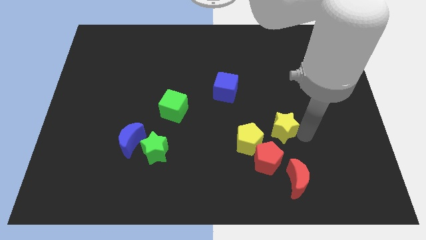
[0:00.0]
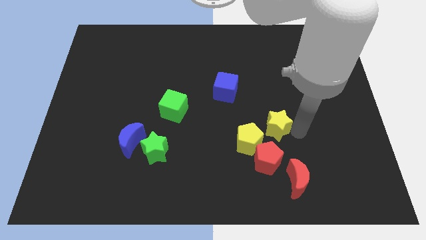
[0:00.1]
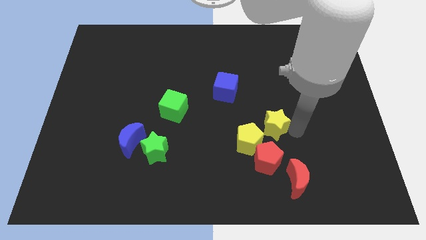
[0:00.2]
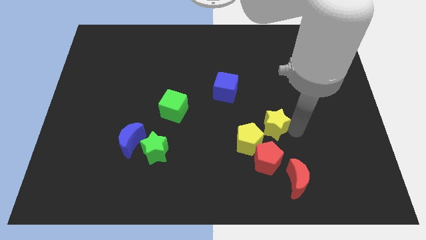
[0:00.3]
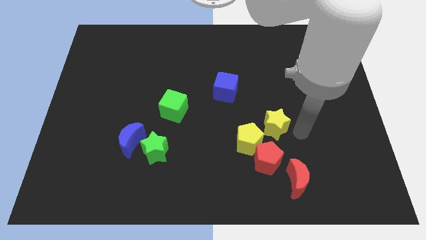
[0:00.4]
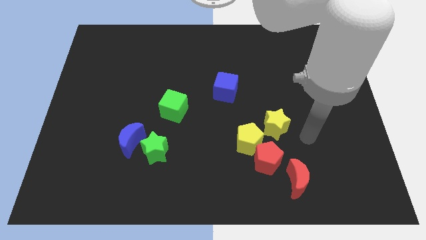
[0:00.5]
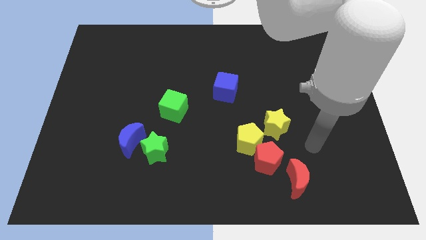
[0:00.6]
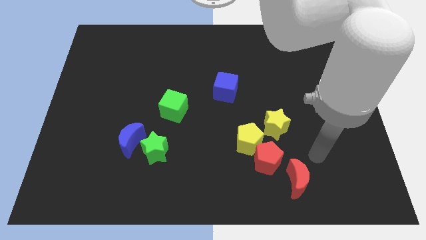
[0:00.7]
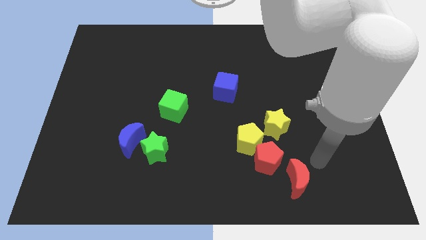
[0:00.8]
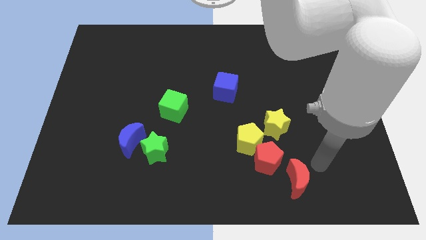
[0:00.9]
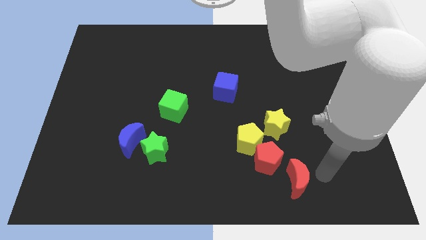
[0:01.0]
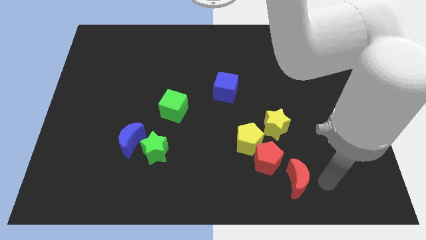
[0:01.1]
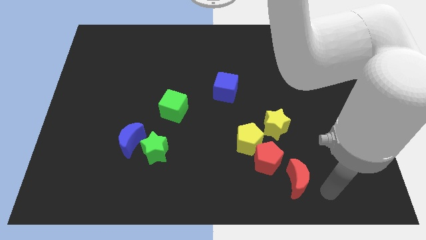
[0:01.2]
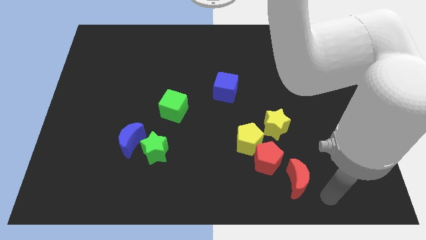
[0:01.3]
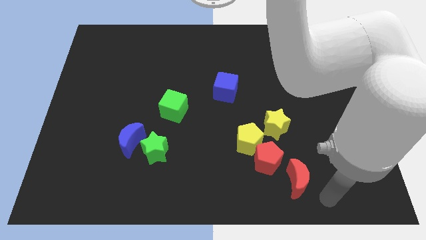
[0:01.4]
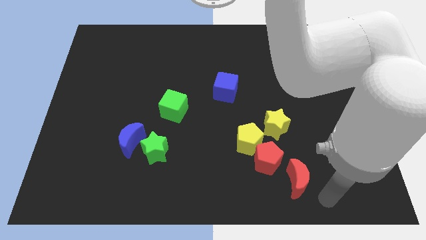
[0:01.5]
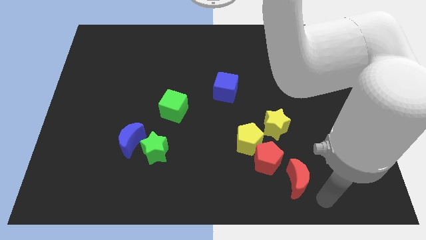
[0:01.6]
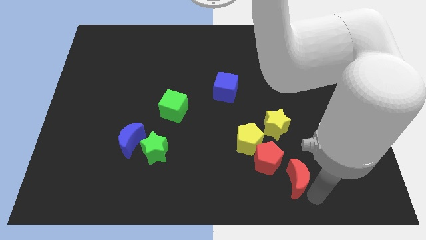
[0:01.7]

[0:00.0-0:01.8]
place the yellow star towards the top right side of the yellow pentagon

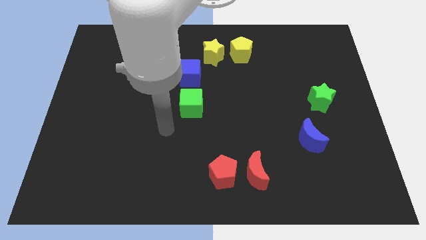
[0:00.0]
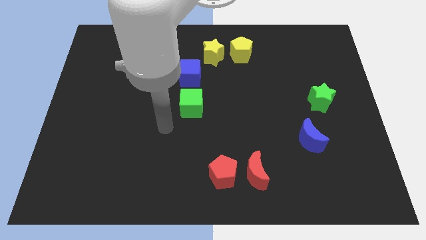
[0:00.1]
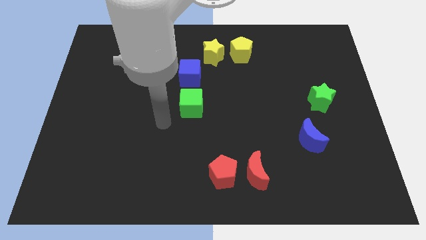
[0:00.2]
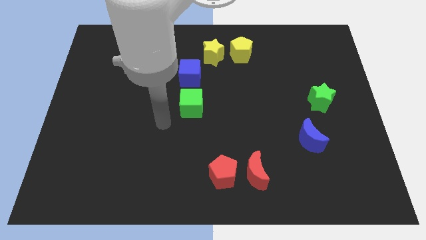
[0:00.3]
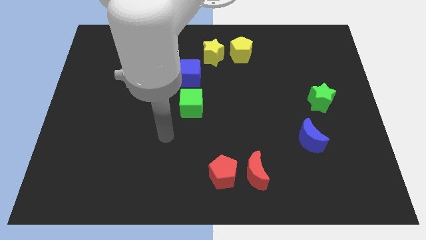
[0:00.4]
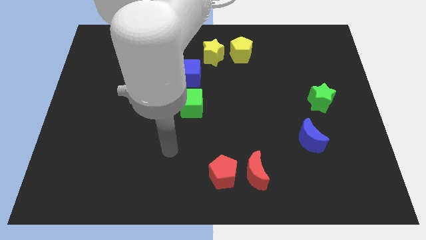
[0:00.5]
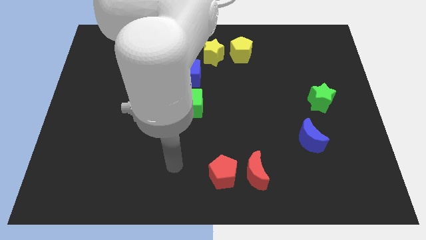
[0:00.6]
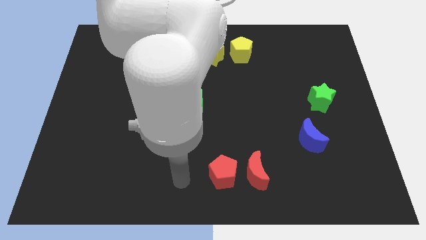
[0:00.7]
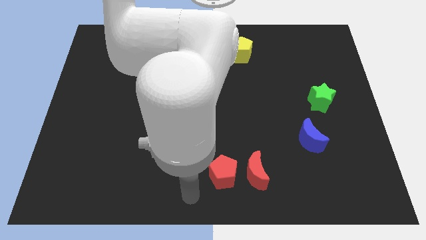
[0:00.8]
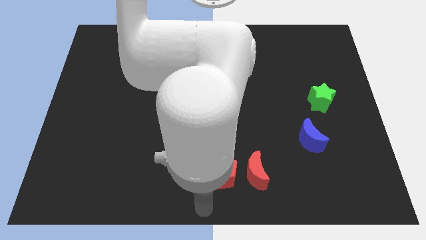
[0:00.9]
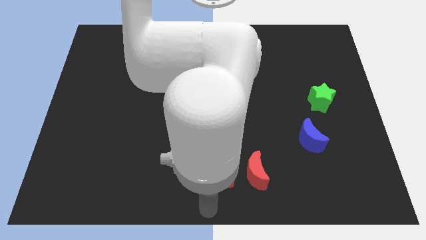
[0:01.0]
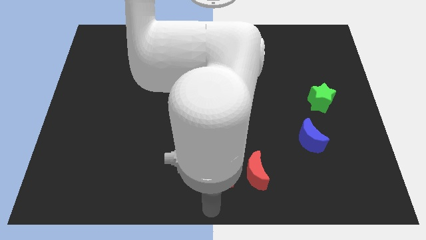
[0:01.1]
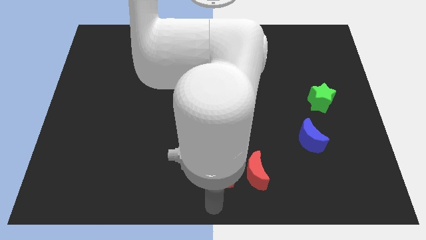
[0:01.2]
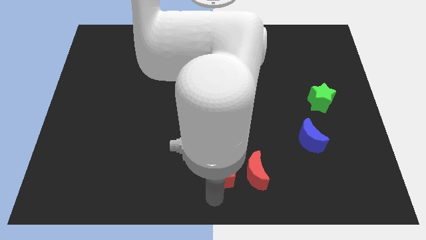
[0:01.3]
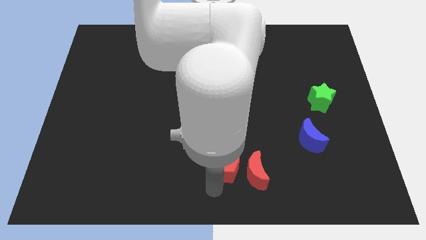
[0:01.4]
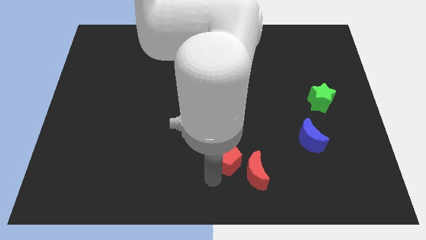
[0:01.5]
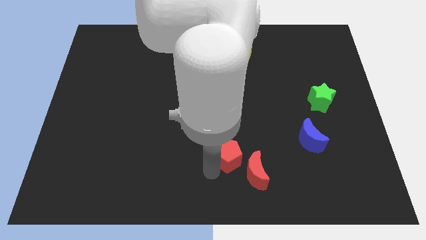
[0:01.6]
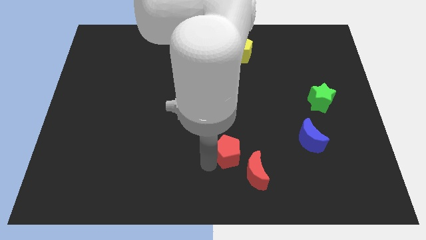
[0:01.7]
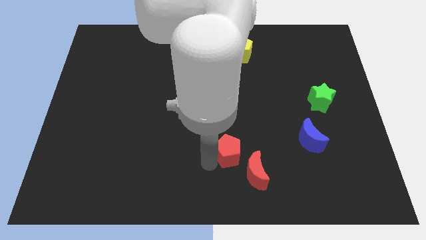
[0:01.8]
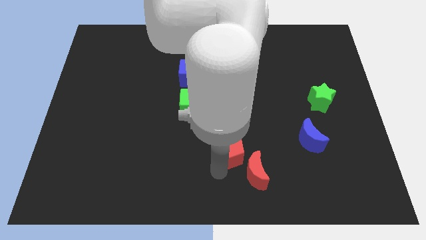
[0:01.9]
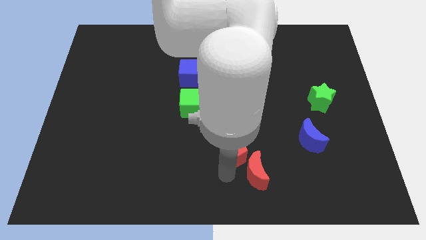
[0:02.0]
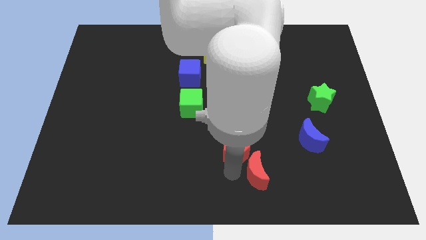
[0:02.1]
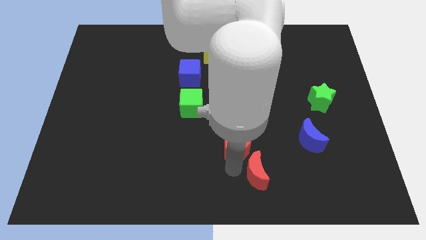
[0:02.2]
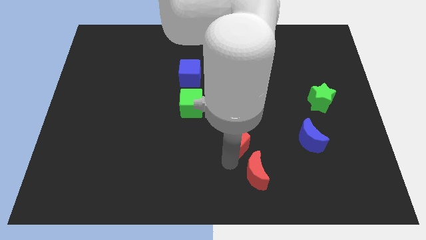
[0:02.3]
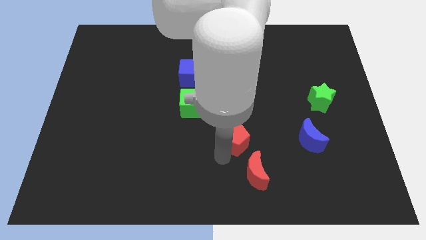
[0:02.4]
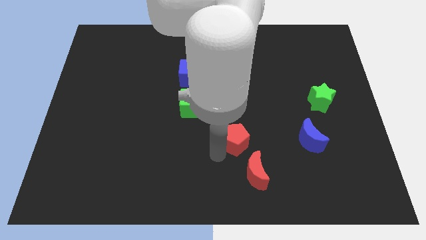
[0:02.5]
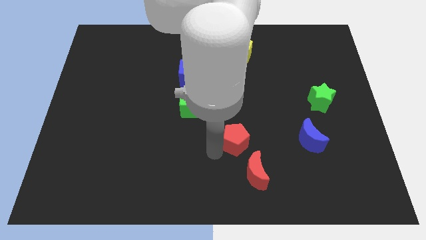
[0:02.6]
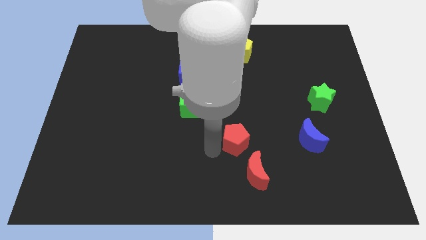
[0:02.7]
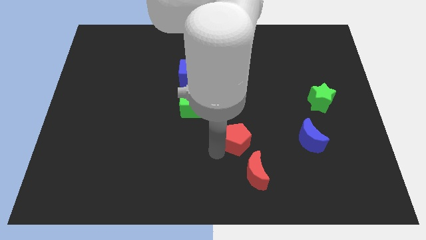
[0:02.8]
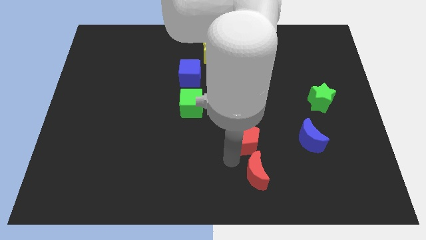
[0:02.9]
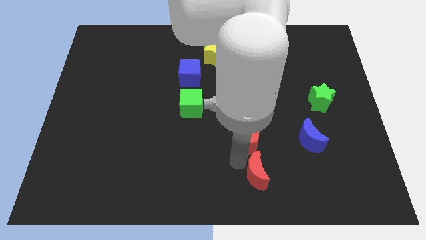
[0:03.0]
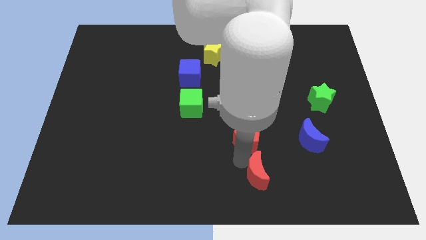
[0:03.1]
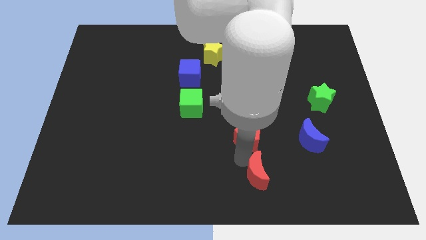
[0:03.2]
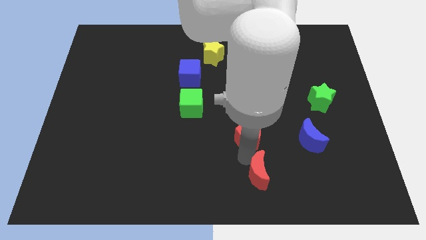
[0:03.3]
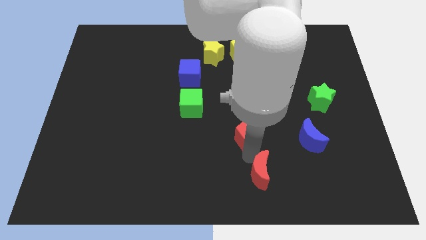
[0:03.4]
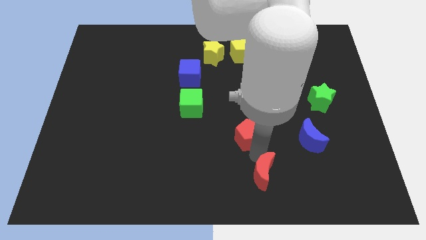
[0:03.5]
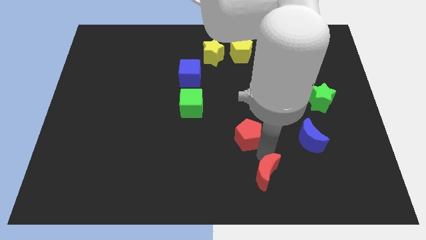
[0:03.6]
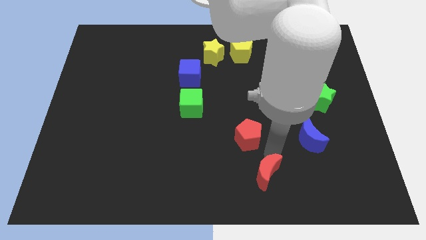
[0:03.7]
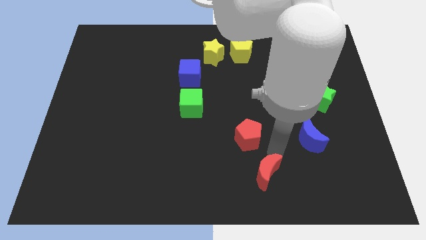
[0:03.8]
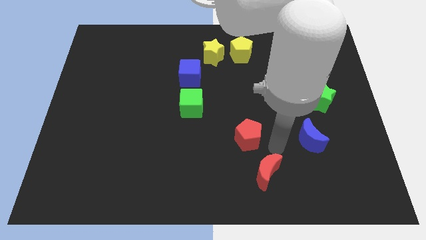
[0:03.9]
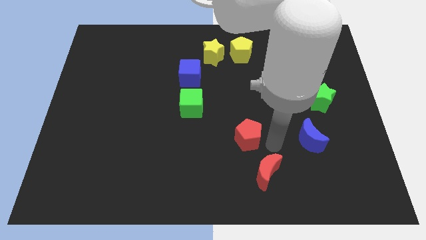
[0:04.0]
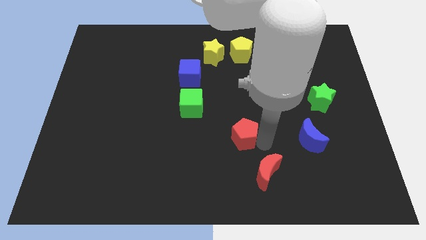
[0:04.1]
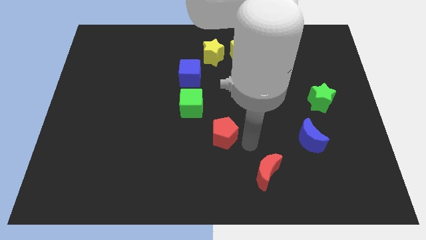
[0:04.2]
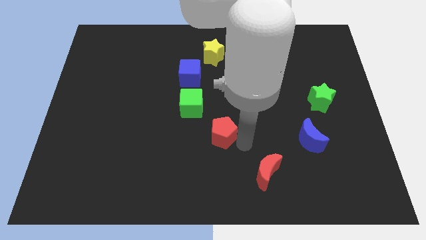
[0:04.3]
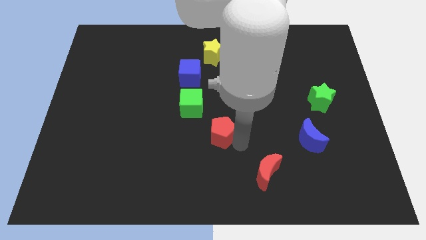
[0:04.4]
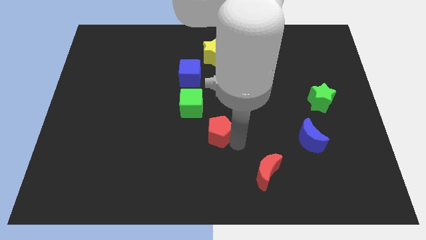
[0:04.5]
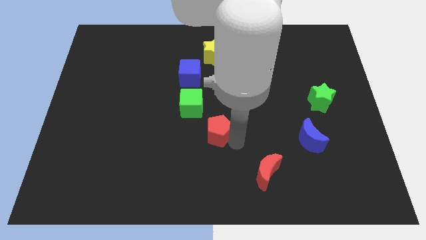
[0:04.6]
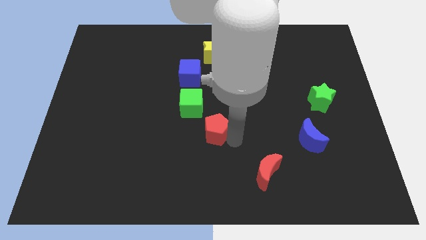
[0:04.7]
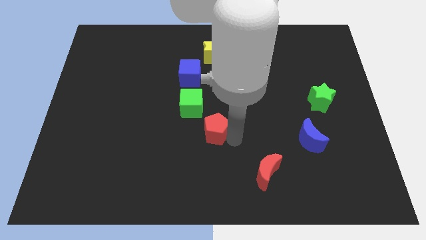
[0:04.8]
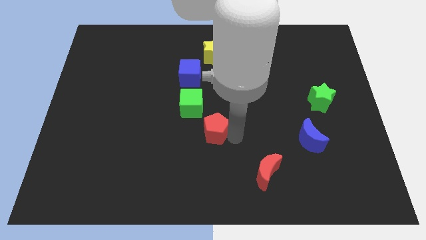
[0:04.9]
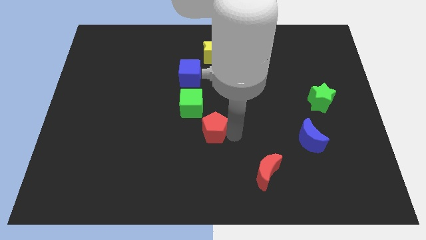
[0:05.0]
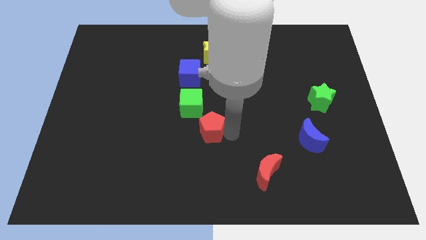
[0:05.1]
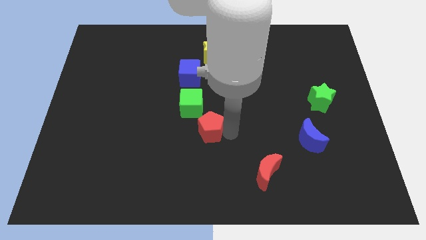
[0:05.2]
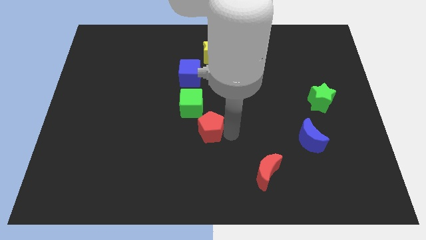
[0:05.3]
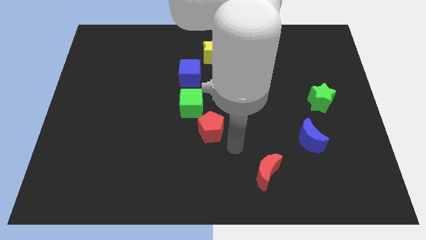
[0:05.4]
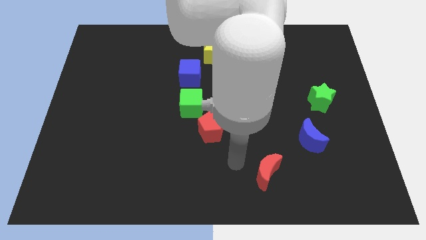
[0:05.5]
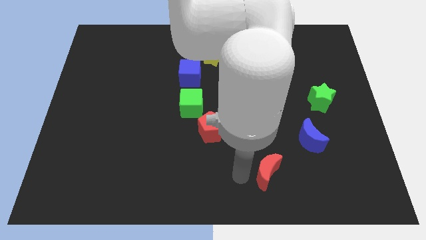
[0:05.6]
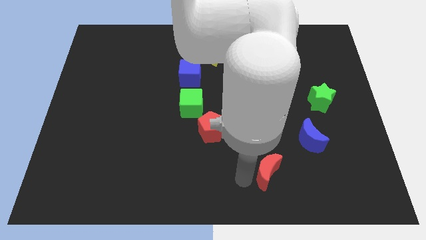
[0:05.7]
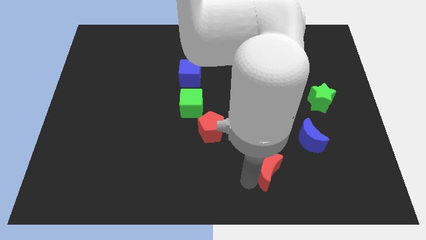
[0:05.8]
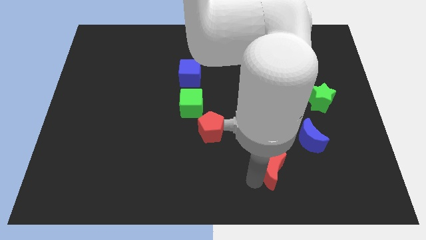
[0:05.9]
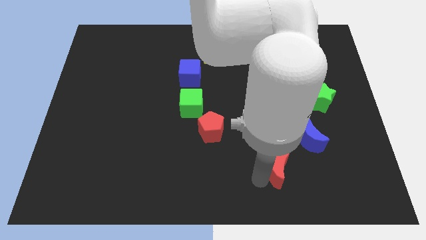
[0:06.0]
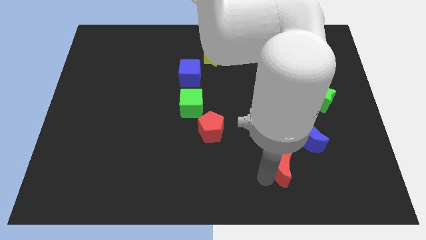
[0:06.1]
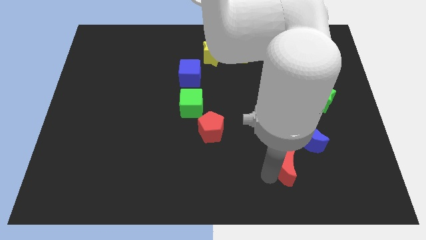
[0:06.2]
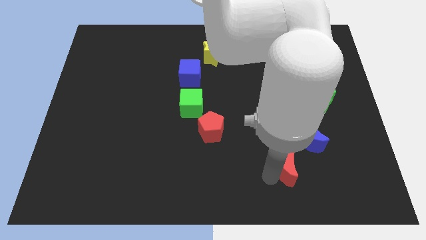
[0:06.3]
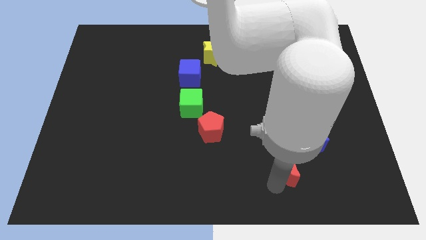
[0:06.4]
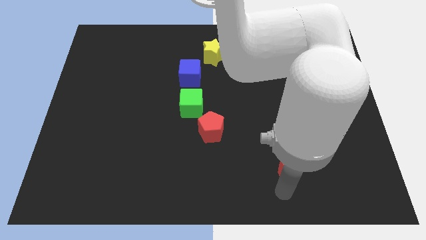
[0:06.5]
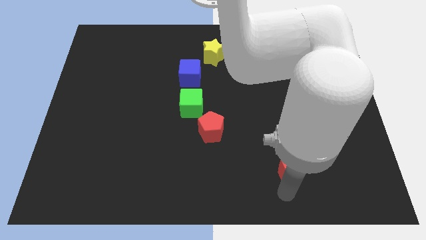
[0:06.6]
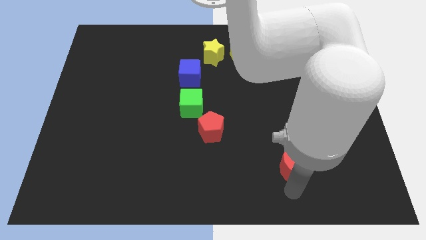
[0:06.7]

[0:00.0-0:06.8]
separate the red pentagon and the red crescent

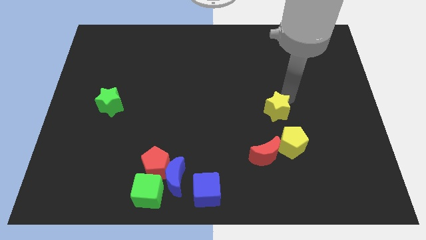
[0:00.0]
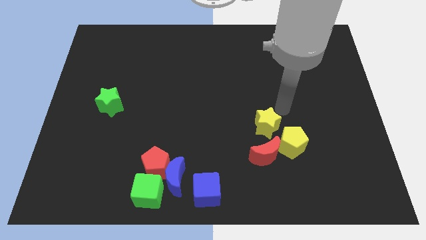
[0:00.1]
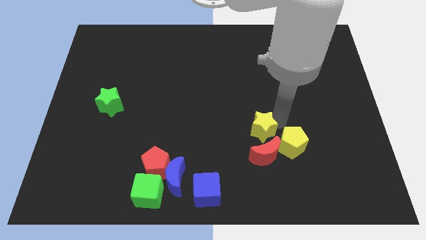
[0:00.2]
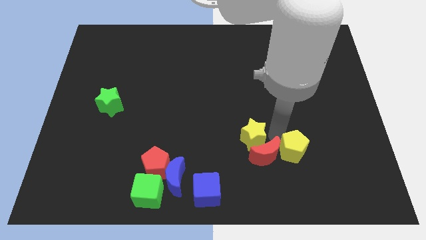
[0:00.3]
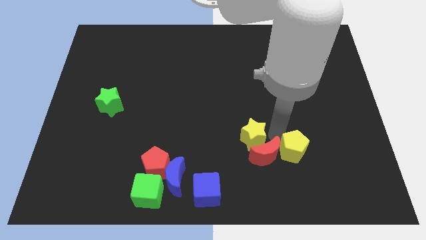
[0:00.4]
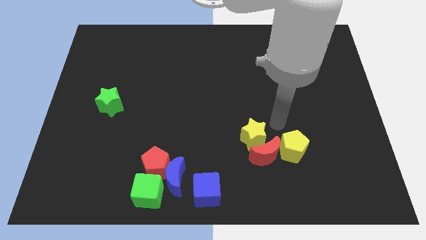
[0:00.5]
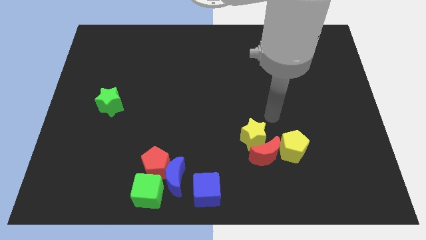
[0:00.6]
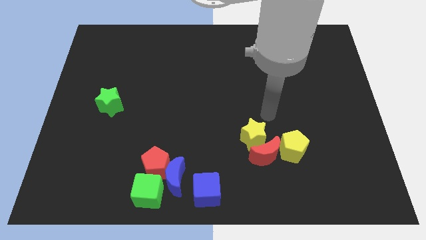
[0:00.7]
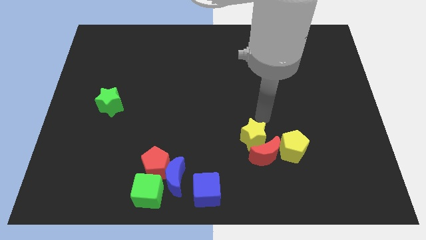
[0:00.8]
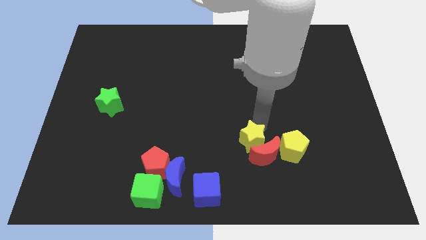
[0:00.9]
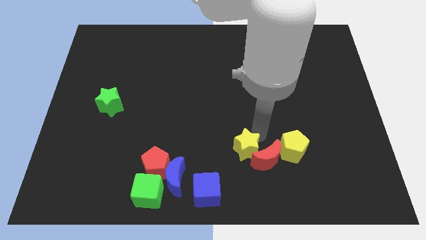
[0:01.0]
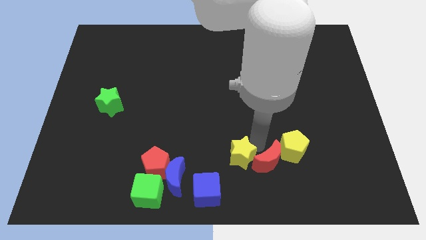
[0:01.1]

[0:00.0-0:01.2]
push yellow star into red crescent
